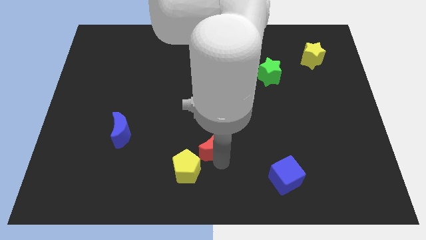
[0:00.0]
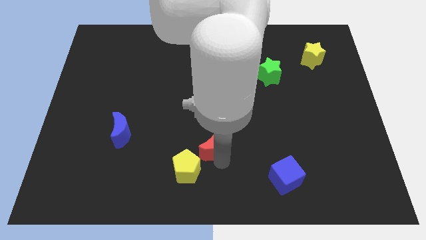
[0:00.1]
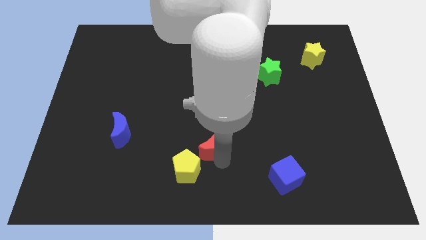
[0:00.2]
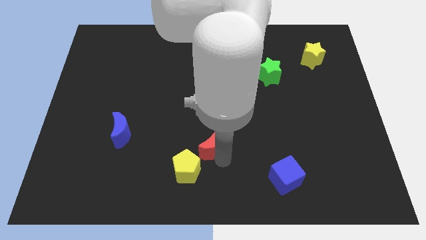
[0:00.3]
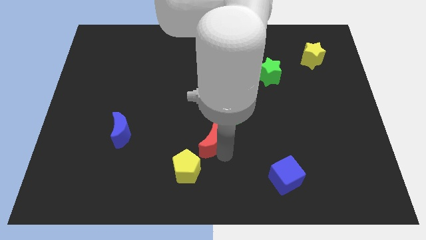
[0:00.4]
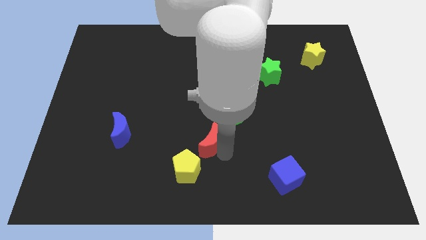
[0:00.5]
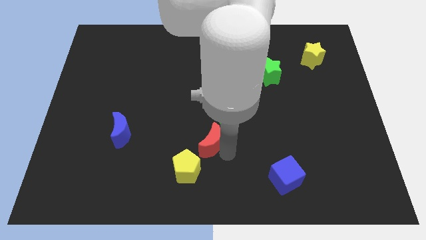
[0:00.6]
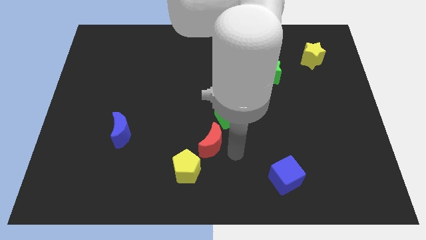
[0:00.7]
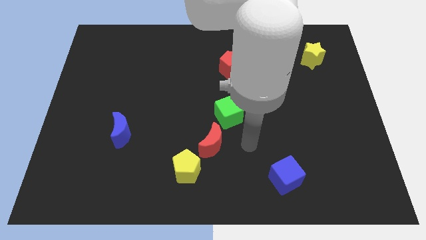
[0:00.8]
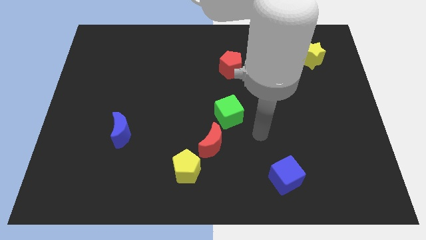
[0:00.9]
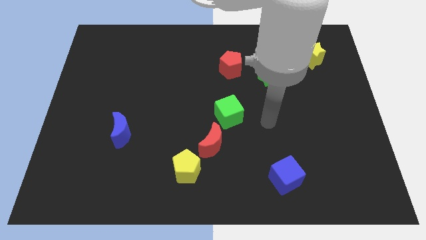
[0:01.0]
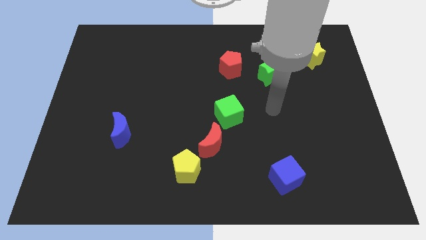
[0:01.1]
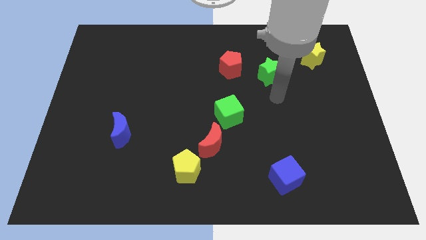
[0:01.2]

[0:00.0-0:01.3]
place the rec moon diagonally in between the green cube and yellow pentagon

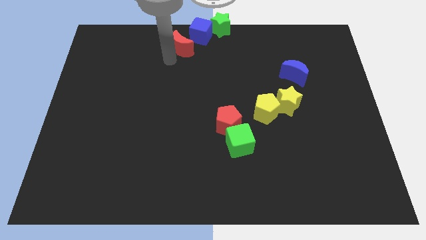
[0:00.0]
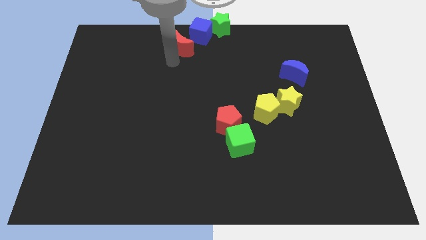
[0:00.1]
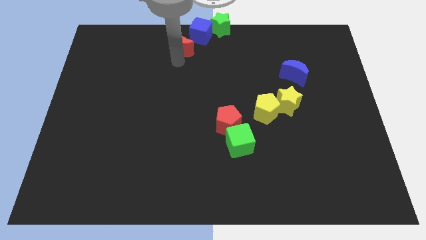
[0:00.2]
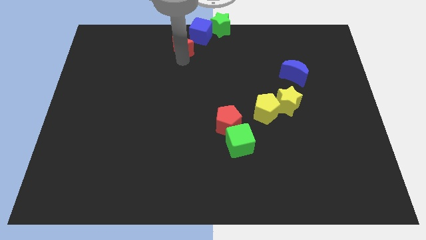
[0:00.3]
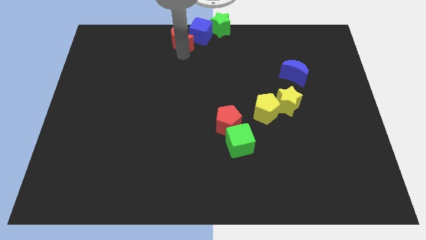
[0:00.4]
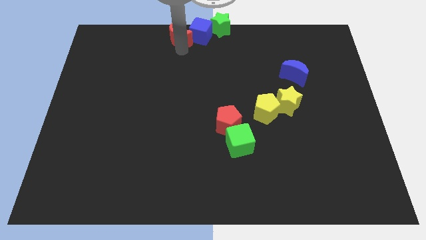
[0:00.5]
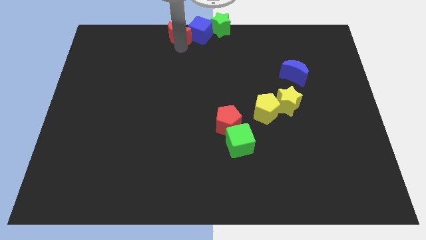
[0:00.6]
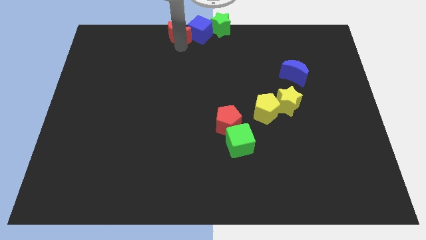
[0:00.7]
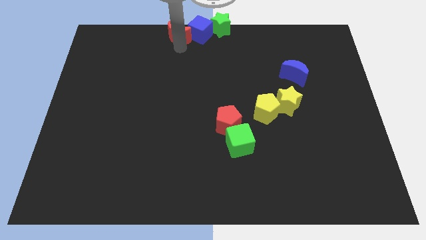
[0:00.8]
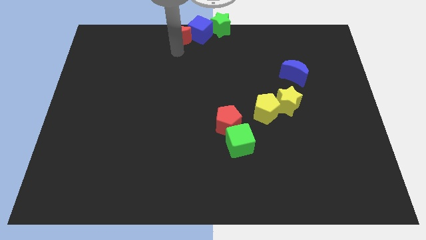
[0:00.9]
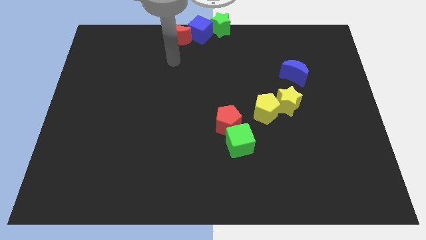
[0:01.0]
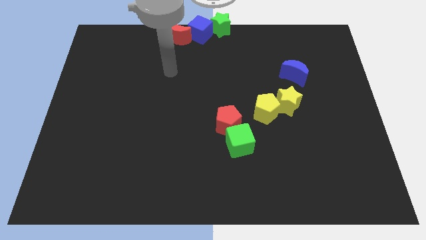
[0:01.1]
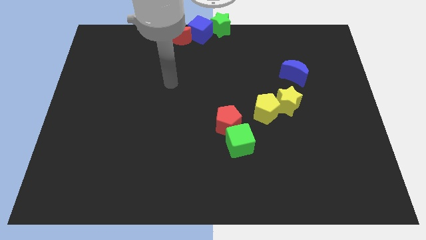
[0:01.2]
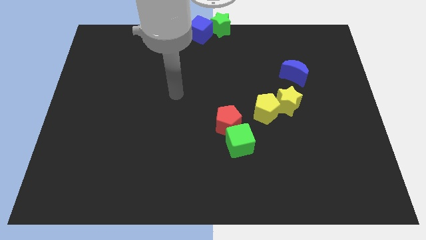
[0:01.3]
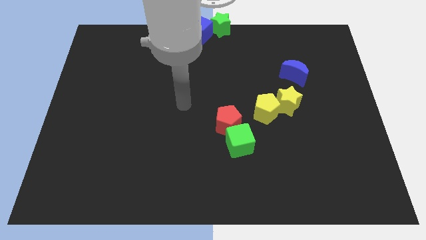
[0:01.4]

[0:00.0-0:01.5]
push red moon into blue cube

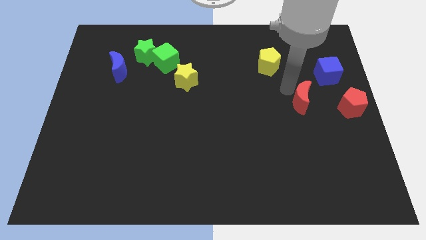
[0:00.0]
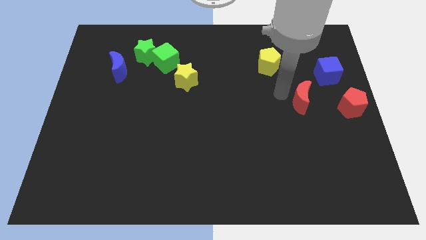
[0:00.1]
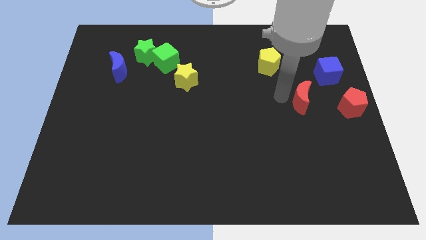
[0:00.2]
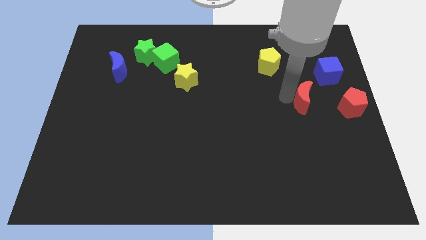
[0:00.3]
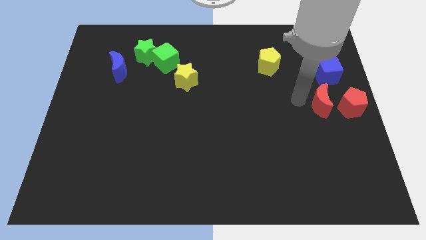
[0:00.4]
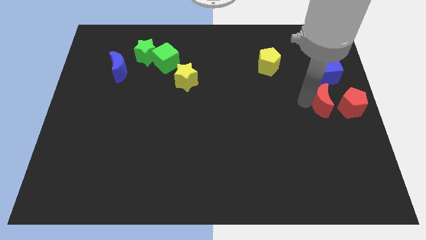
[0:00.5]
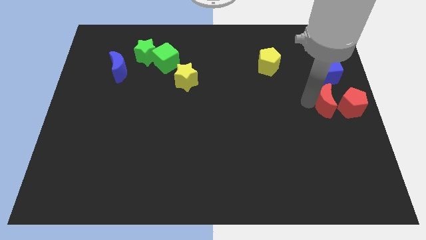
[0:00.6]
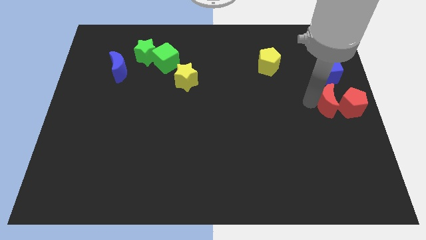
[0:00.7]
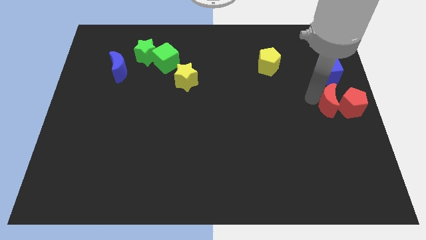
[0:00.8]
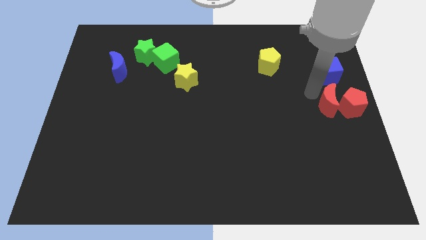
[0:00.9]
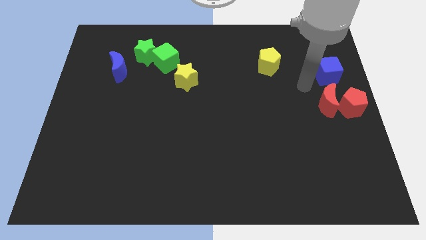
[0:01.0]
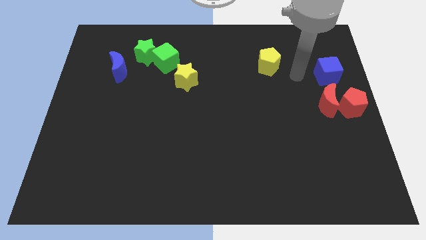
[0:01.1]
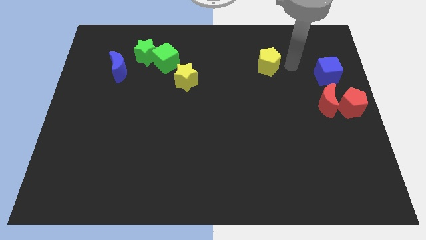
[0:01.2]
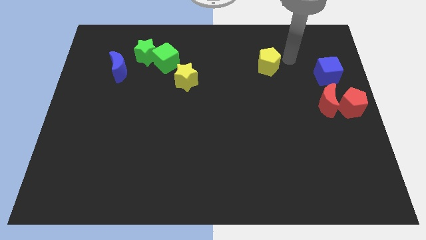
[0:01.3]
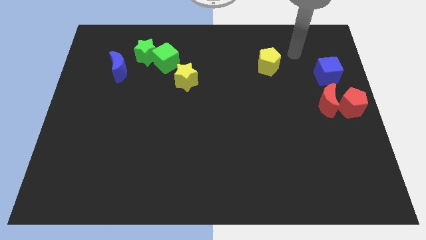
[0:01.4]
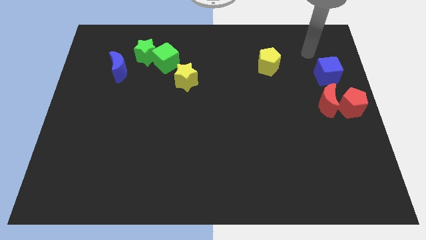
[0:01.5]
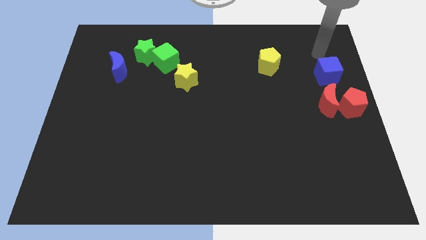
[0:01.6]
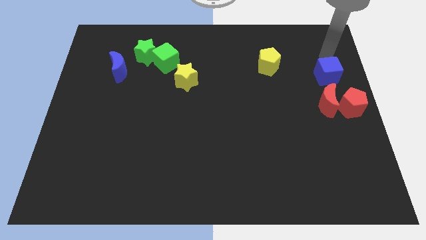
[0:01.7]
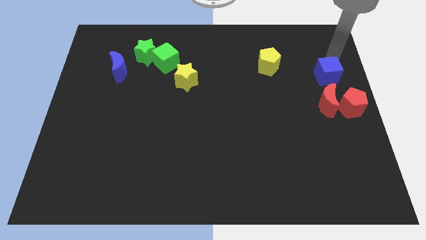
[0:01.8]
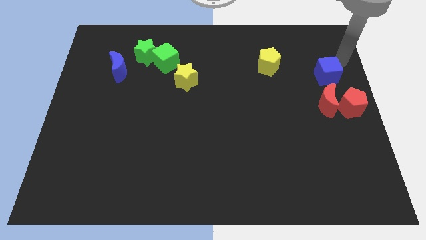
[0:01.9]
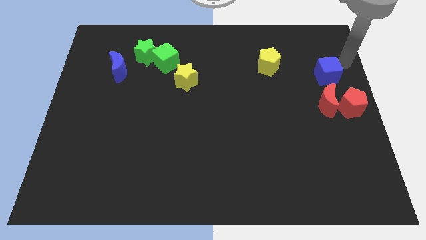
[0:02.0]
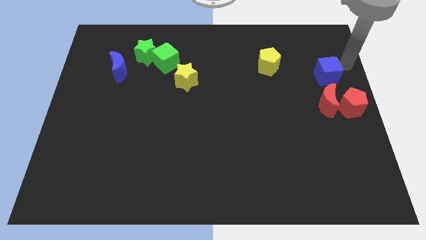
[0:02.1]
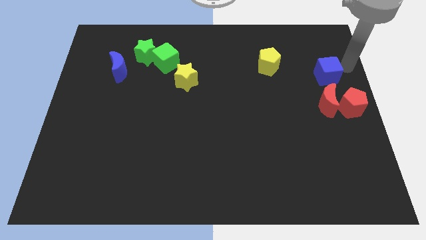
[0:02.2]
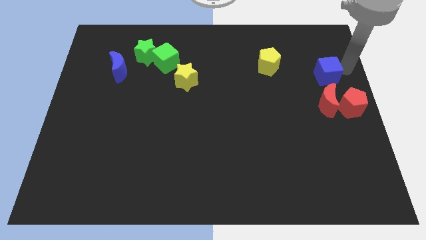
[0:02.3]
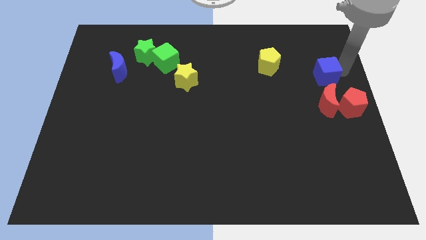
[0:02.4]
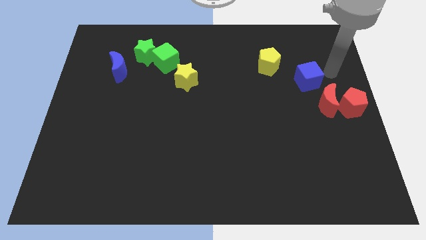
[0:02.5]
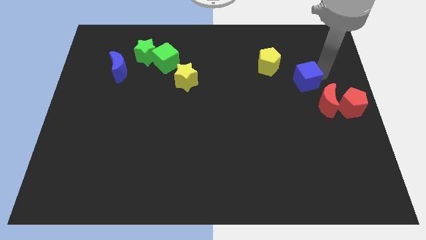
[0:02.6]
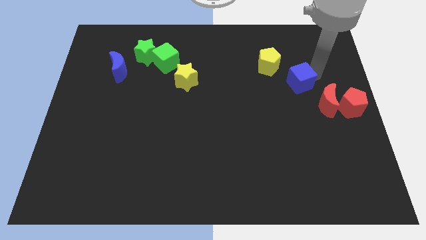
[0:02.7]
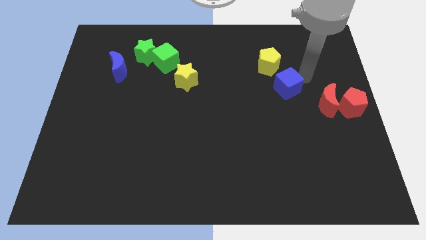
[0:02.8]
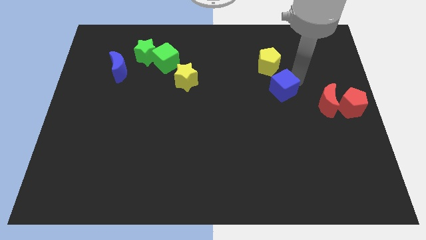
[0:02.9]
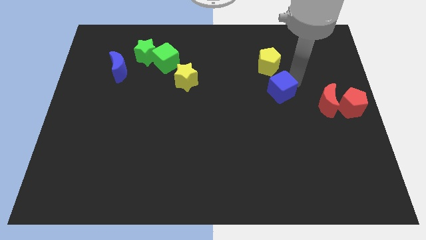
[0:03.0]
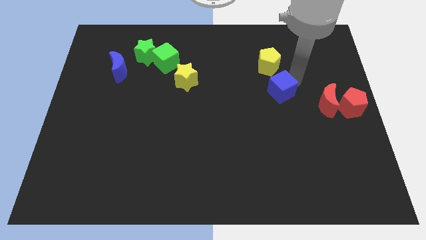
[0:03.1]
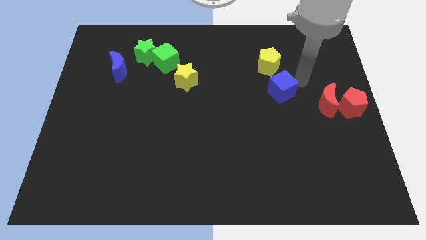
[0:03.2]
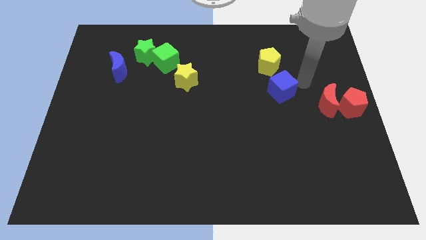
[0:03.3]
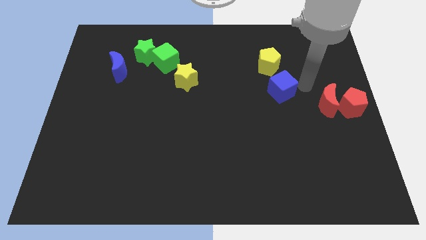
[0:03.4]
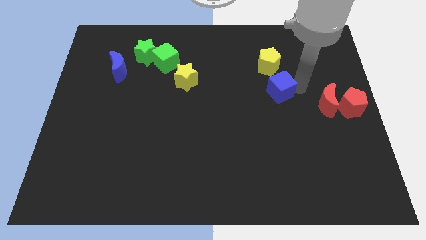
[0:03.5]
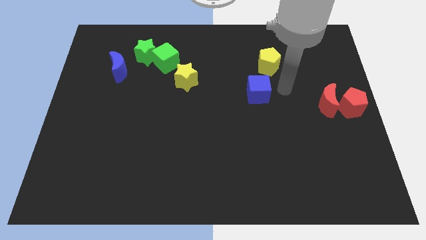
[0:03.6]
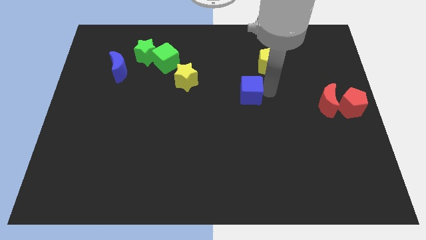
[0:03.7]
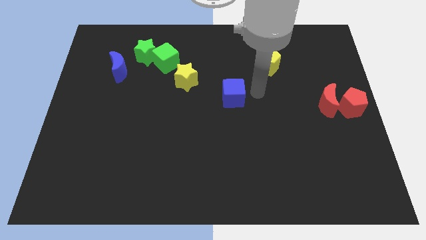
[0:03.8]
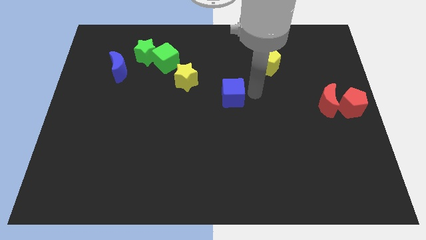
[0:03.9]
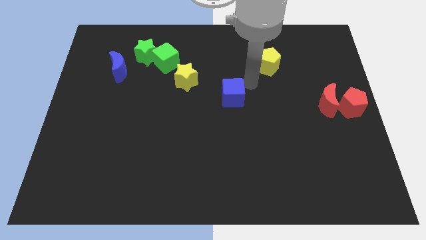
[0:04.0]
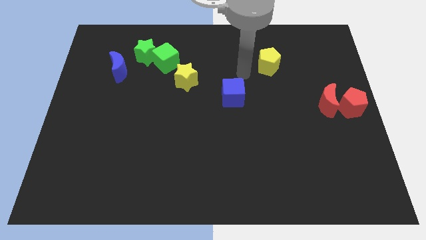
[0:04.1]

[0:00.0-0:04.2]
place the blue cube diagonal to the yellow star

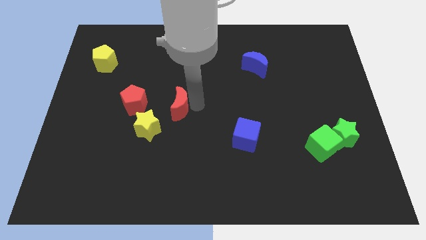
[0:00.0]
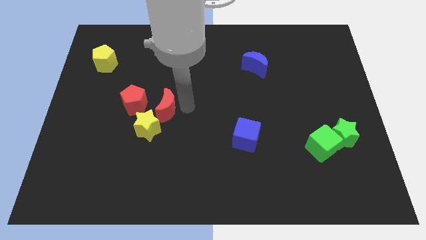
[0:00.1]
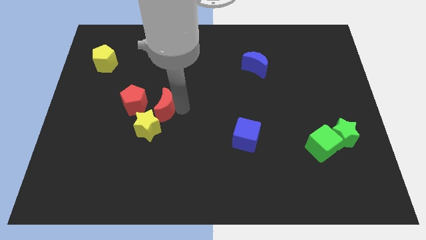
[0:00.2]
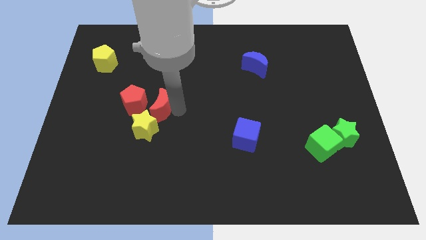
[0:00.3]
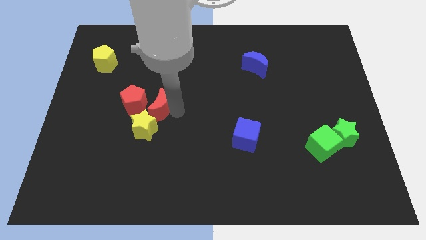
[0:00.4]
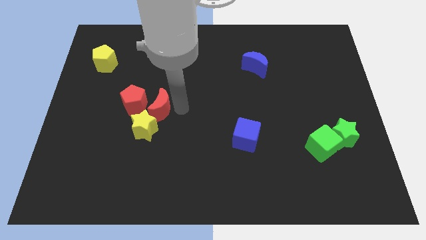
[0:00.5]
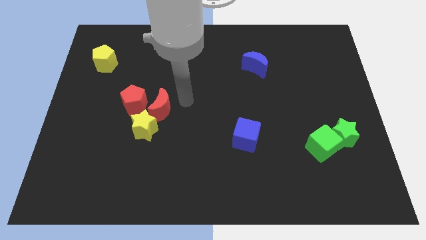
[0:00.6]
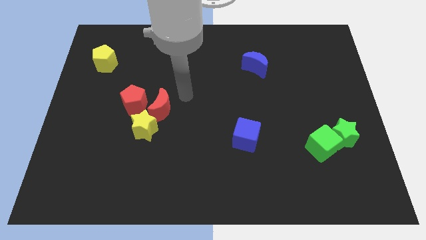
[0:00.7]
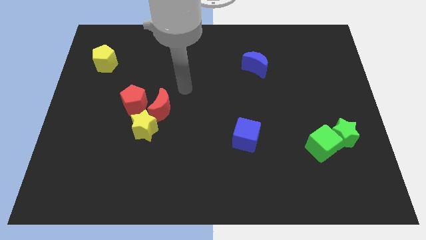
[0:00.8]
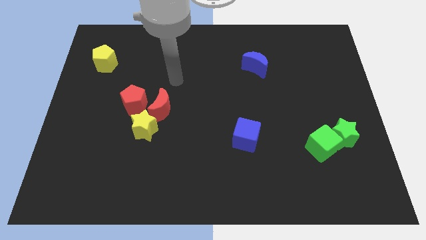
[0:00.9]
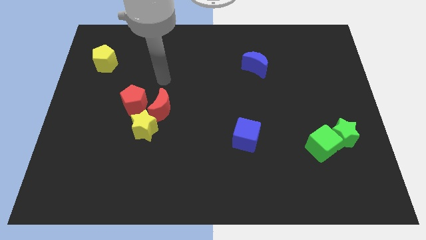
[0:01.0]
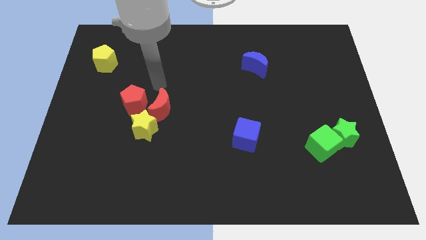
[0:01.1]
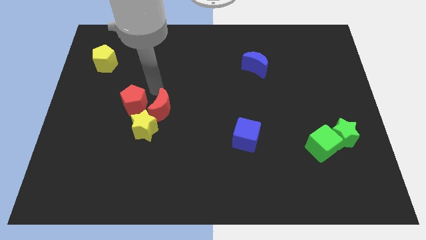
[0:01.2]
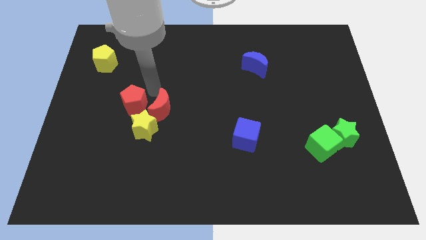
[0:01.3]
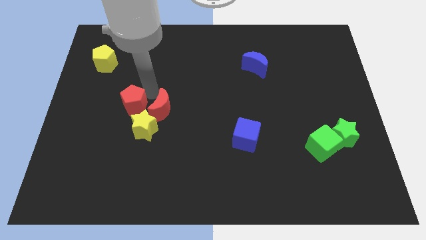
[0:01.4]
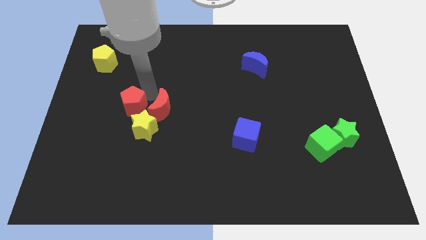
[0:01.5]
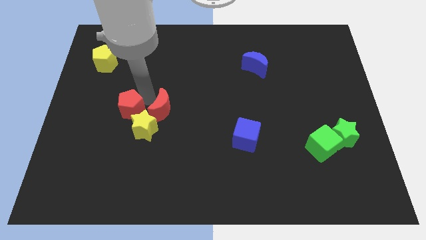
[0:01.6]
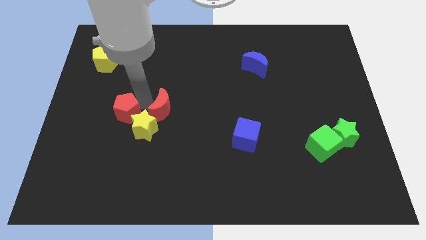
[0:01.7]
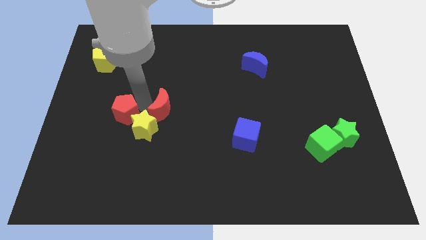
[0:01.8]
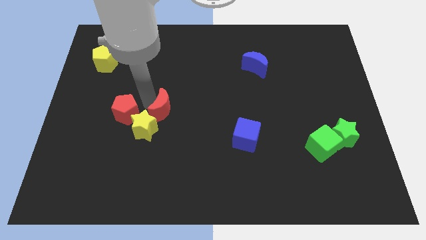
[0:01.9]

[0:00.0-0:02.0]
move the red crescent close to red pentagon
